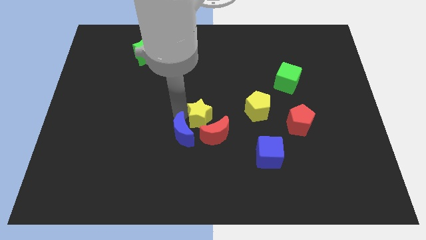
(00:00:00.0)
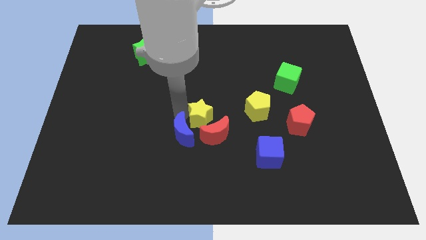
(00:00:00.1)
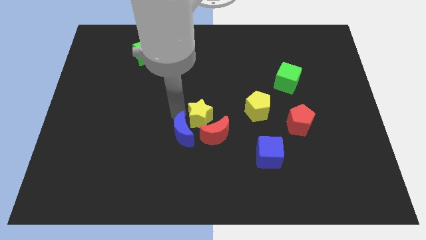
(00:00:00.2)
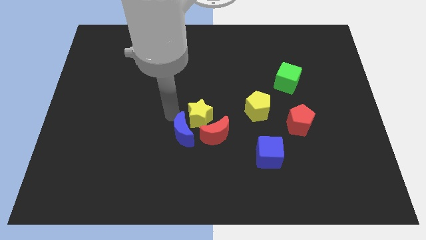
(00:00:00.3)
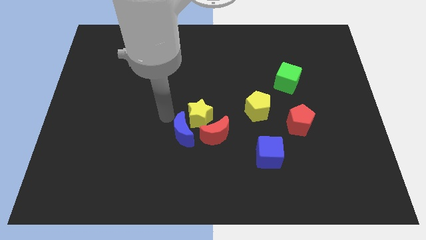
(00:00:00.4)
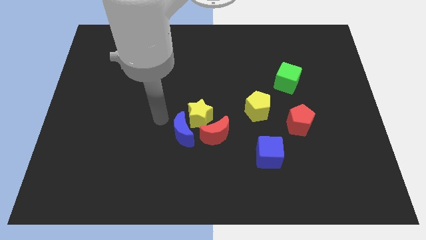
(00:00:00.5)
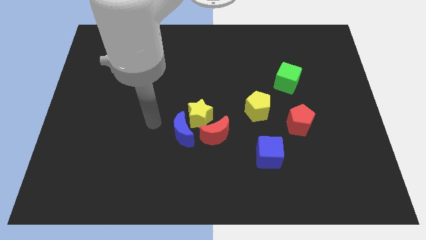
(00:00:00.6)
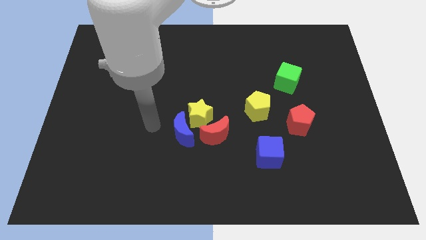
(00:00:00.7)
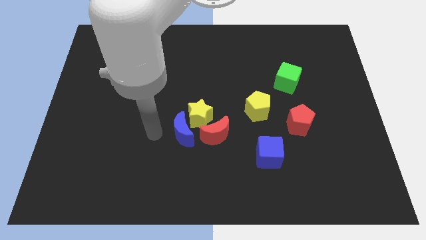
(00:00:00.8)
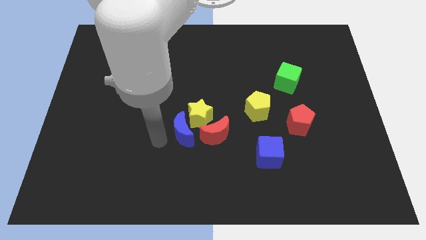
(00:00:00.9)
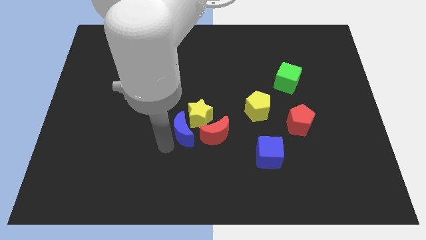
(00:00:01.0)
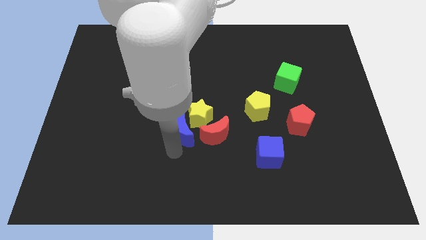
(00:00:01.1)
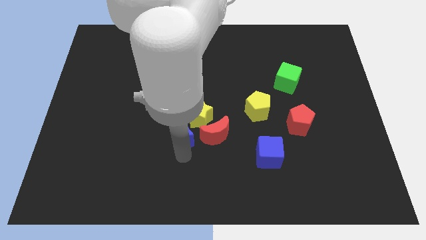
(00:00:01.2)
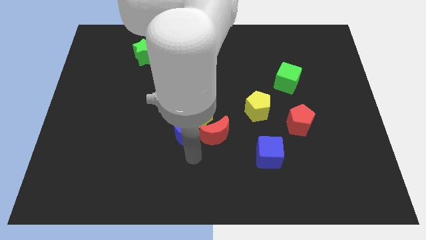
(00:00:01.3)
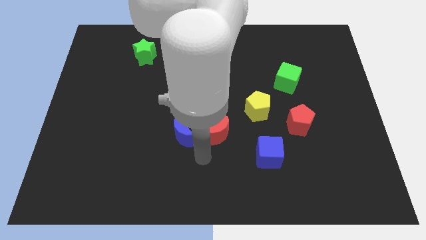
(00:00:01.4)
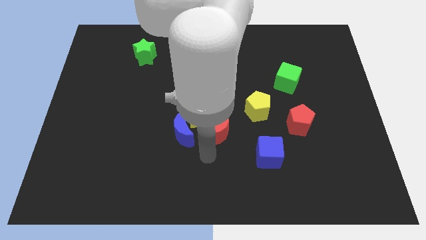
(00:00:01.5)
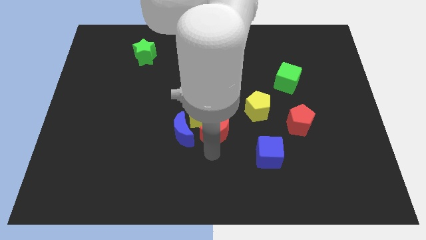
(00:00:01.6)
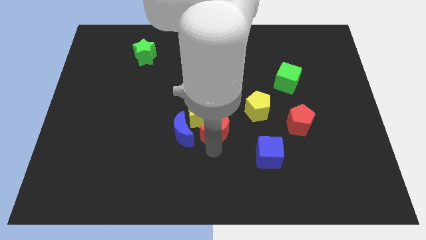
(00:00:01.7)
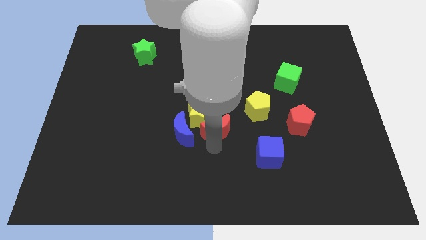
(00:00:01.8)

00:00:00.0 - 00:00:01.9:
move your arm away from yellow star

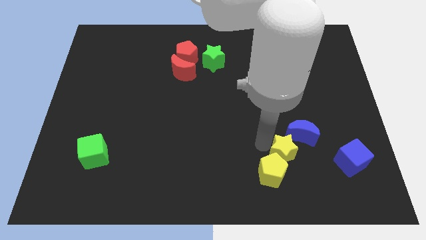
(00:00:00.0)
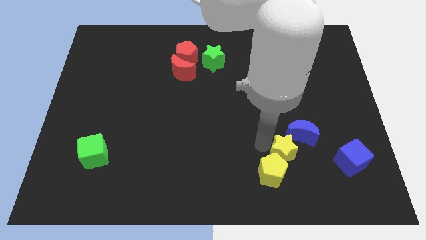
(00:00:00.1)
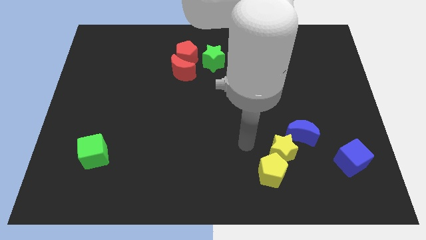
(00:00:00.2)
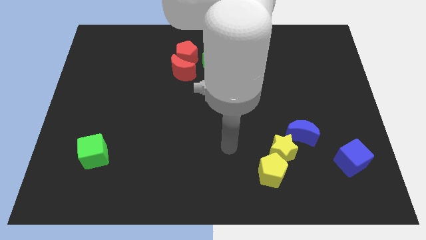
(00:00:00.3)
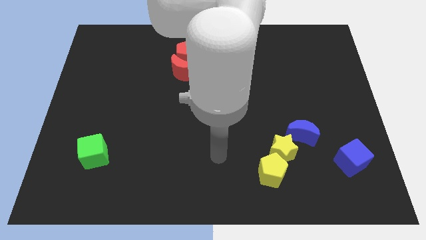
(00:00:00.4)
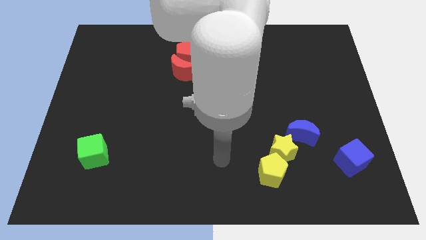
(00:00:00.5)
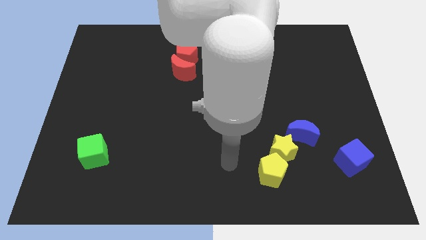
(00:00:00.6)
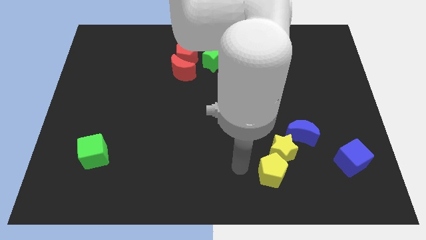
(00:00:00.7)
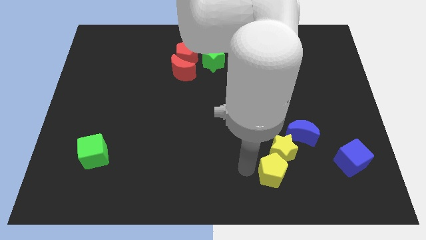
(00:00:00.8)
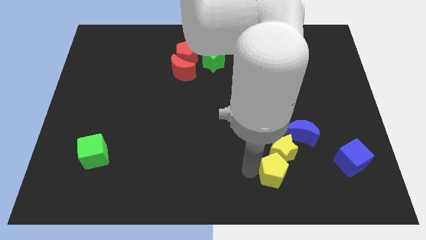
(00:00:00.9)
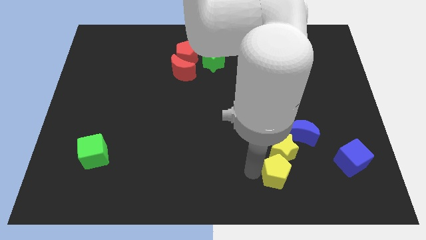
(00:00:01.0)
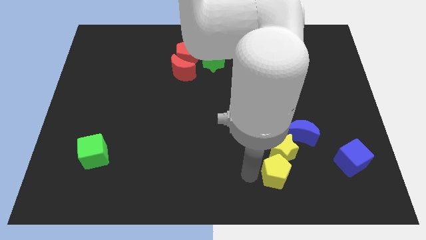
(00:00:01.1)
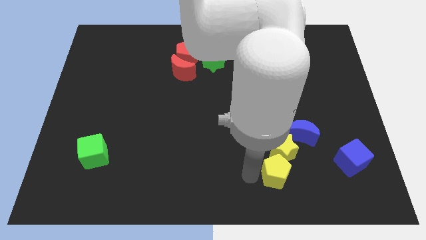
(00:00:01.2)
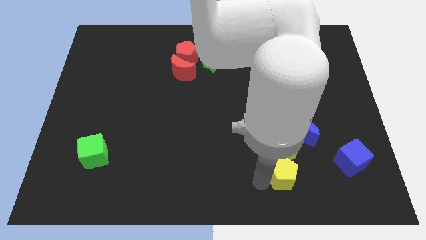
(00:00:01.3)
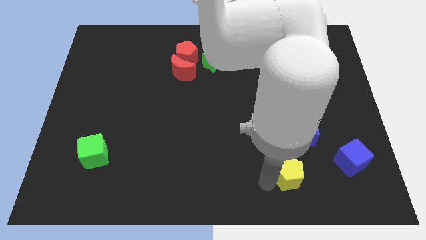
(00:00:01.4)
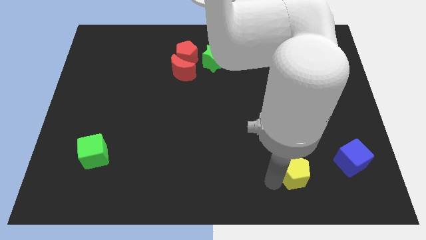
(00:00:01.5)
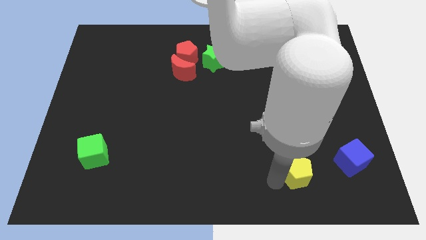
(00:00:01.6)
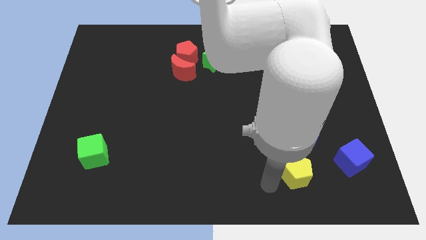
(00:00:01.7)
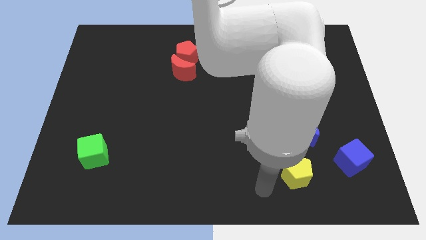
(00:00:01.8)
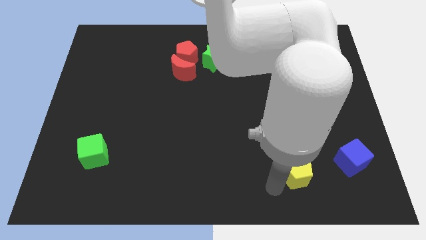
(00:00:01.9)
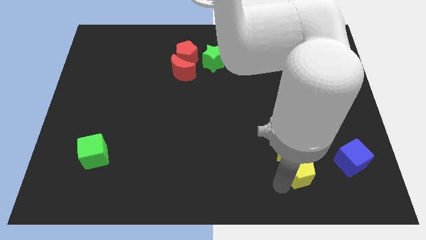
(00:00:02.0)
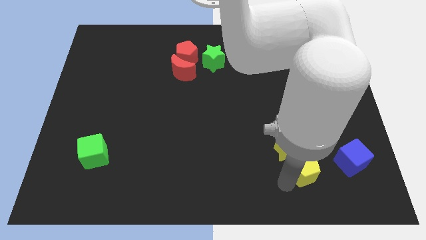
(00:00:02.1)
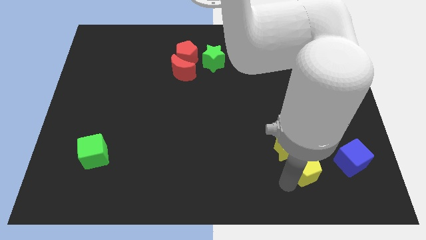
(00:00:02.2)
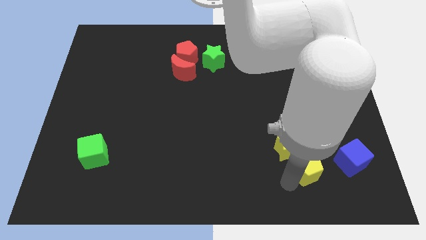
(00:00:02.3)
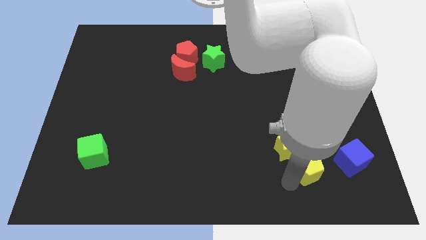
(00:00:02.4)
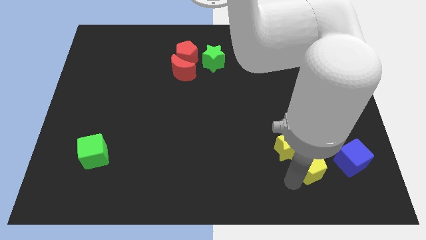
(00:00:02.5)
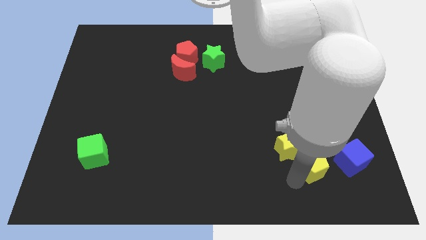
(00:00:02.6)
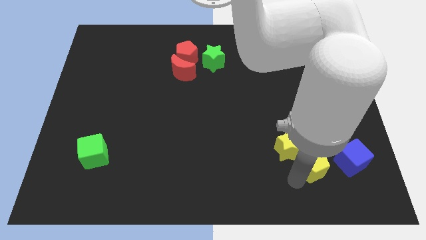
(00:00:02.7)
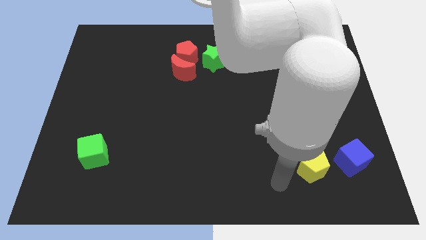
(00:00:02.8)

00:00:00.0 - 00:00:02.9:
place the yellow pentagon right to the yellow star

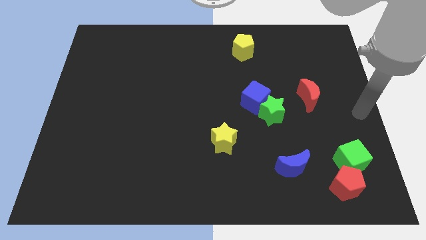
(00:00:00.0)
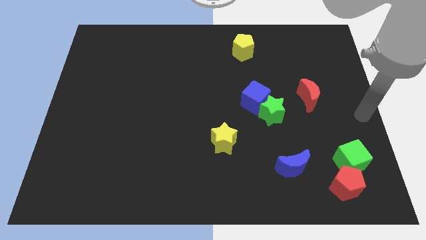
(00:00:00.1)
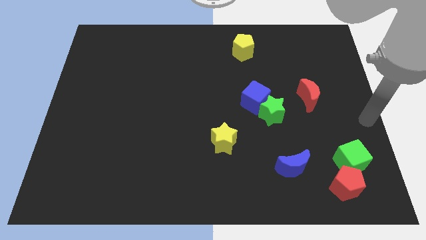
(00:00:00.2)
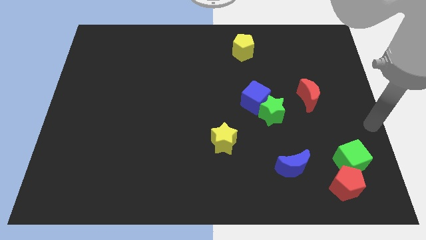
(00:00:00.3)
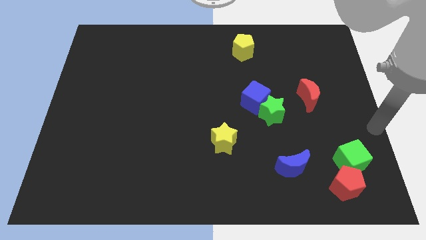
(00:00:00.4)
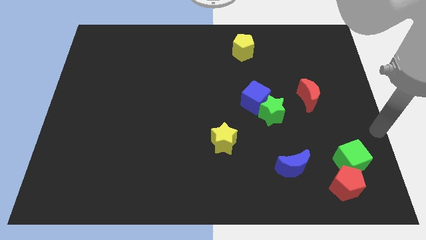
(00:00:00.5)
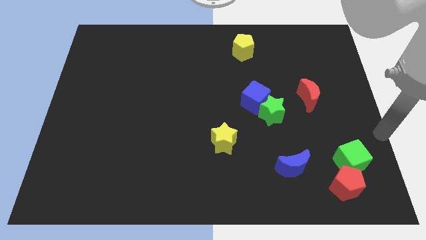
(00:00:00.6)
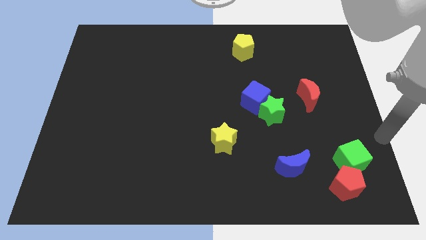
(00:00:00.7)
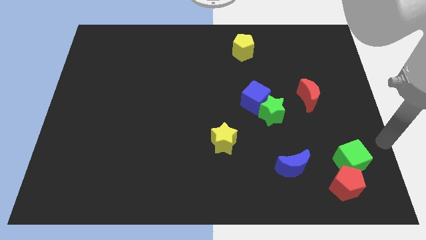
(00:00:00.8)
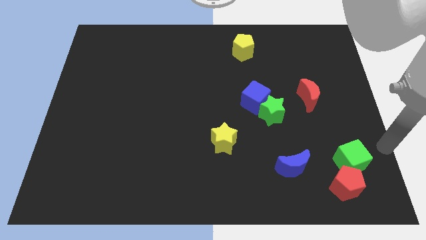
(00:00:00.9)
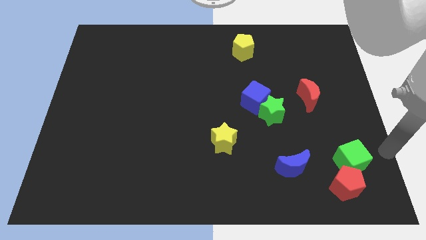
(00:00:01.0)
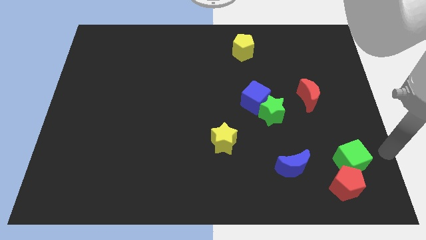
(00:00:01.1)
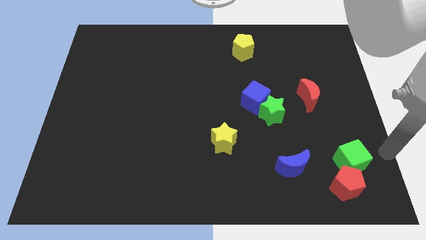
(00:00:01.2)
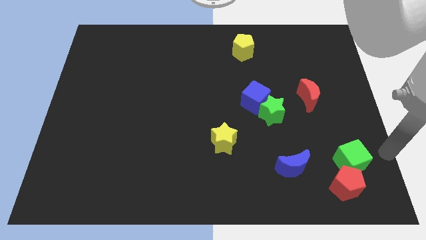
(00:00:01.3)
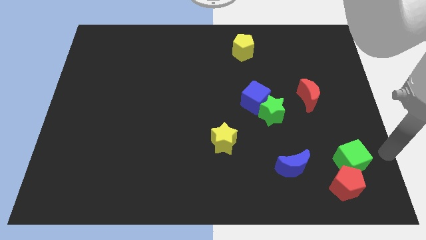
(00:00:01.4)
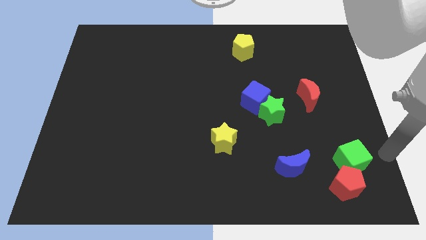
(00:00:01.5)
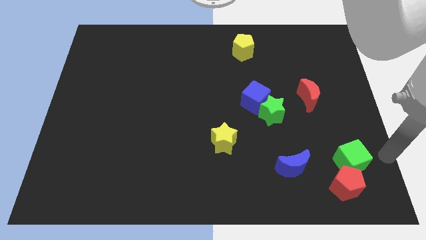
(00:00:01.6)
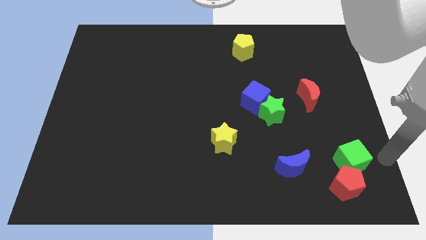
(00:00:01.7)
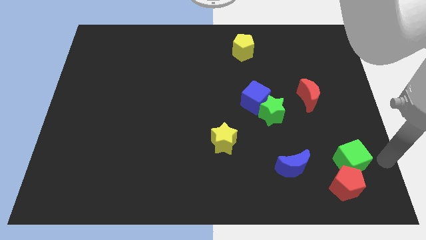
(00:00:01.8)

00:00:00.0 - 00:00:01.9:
place your arm at the right of the green cube

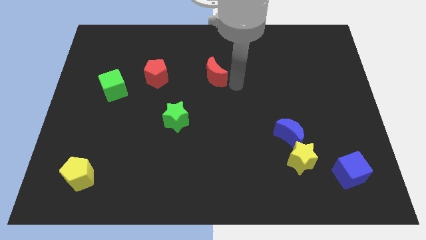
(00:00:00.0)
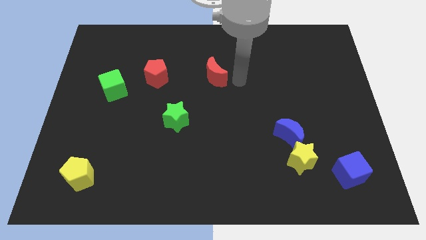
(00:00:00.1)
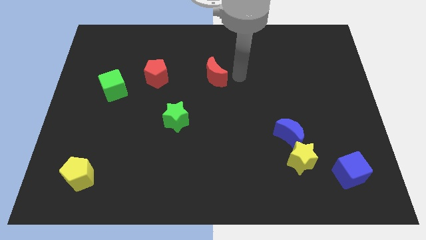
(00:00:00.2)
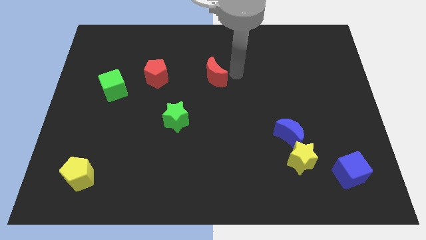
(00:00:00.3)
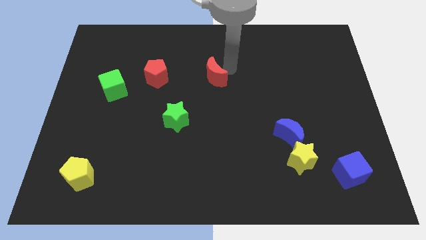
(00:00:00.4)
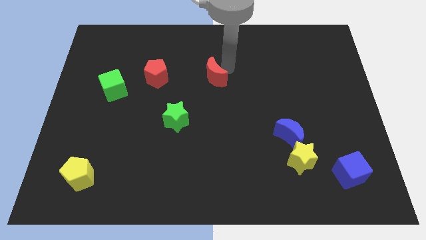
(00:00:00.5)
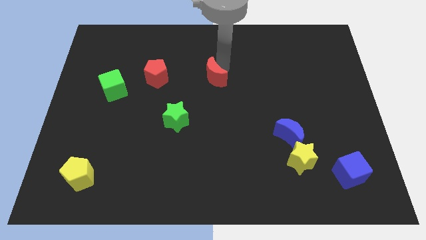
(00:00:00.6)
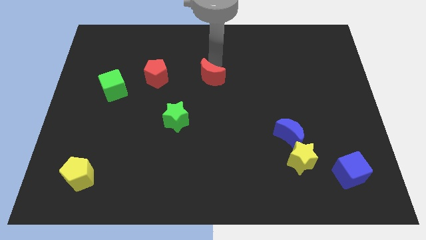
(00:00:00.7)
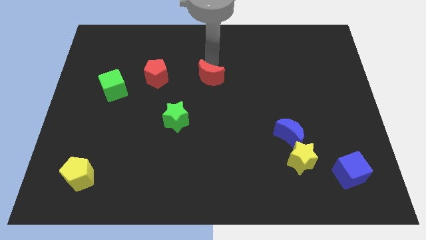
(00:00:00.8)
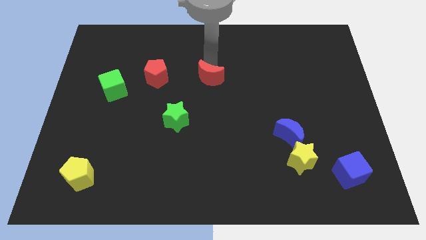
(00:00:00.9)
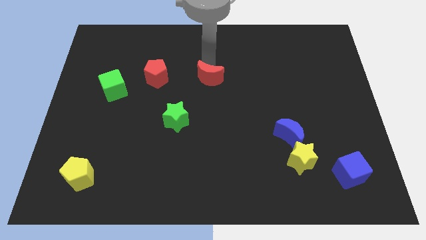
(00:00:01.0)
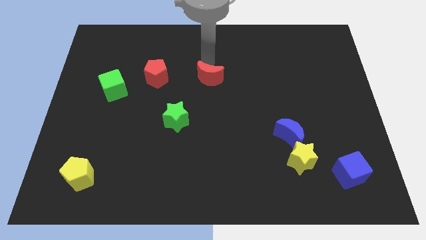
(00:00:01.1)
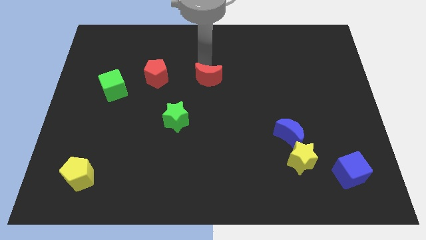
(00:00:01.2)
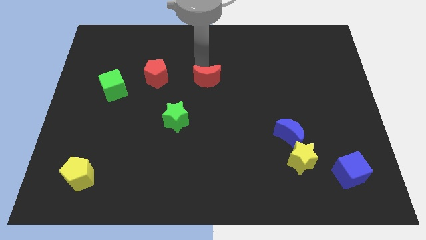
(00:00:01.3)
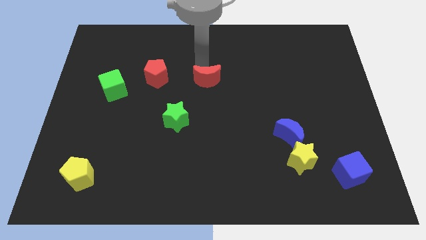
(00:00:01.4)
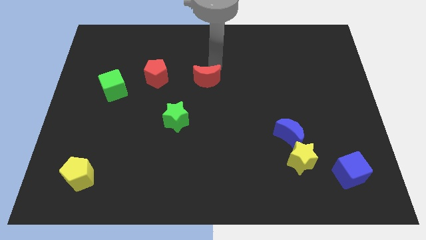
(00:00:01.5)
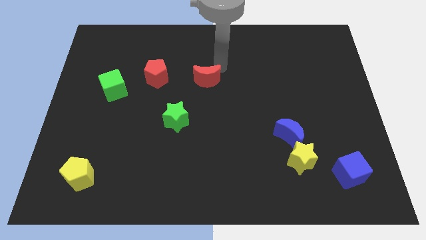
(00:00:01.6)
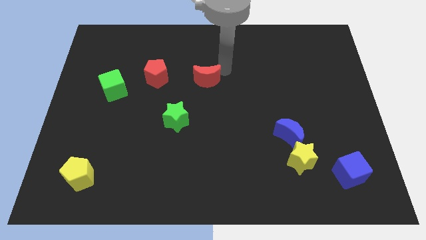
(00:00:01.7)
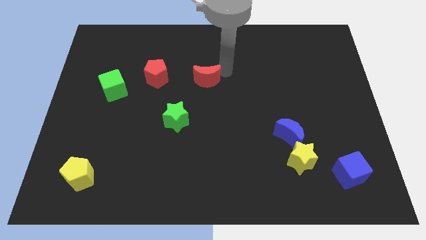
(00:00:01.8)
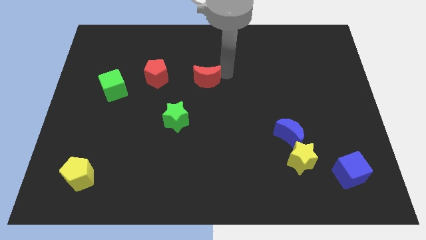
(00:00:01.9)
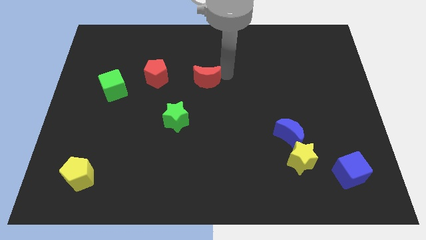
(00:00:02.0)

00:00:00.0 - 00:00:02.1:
push the red moon towards the left
